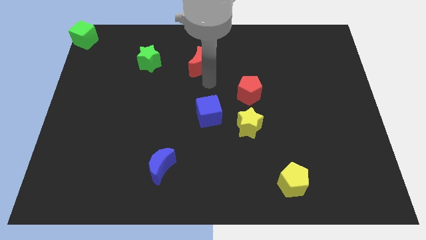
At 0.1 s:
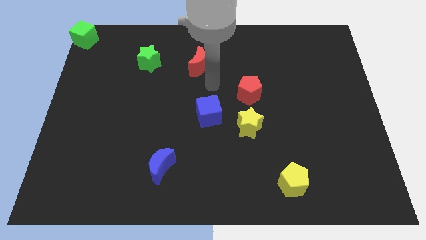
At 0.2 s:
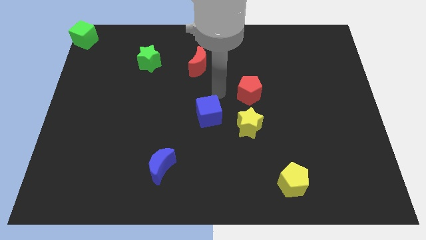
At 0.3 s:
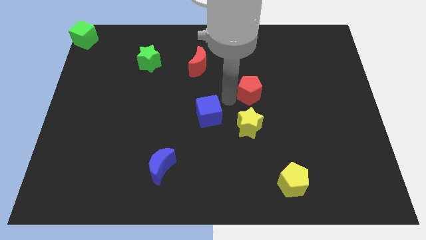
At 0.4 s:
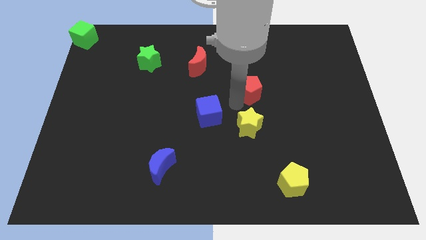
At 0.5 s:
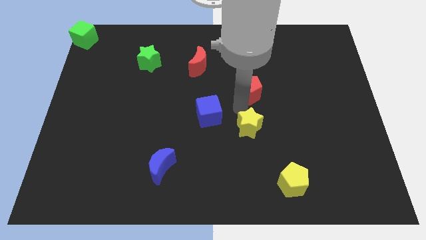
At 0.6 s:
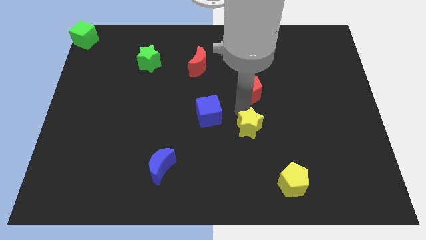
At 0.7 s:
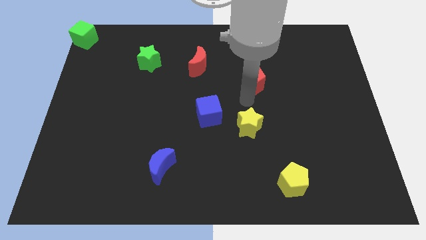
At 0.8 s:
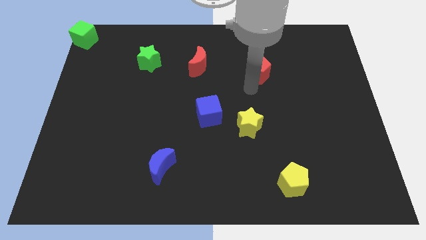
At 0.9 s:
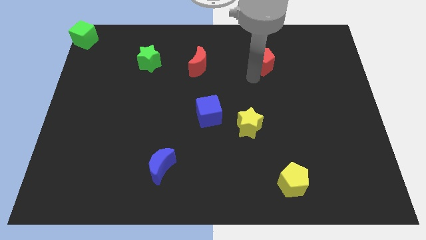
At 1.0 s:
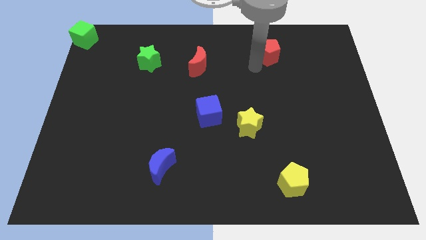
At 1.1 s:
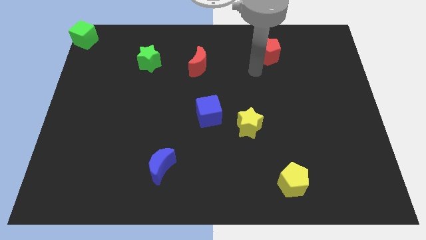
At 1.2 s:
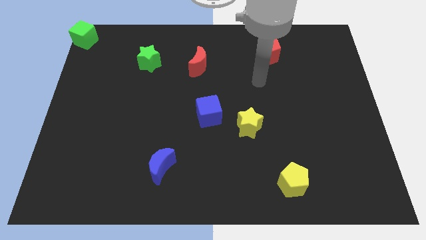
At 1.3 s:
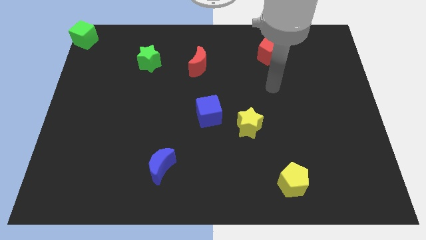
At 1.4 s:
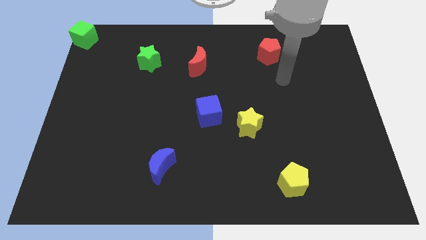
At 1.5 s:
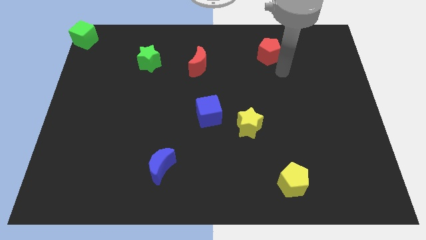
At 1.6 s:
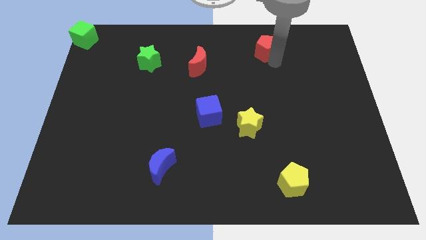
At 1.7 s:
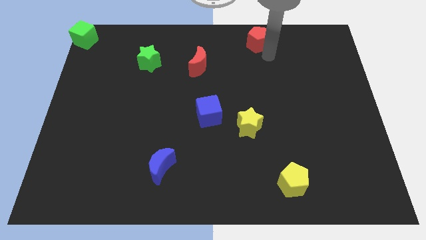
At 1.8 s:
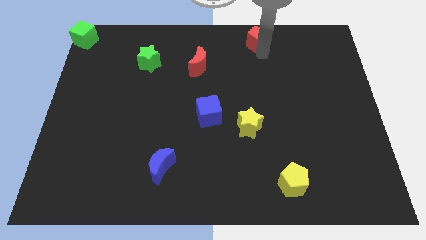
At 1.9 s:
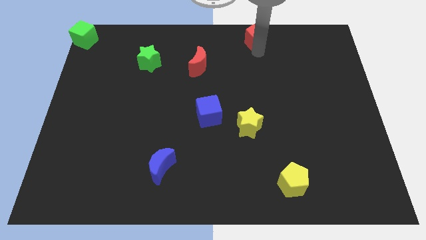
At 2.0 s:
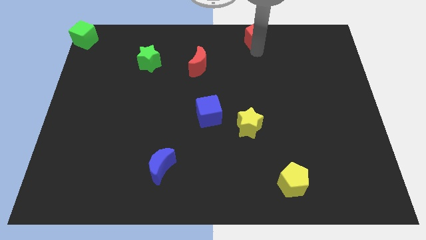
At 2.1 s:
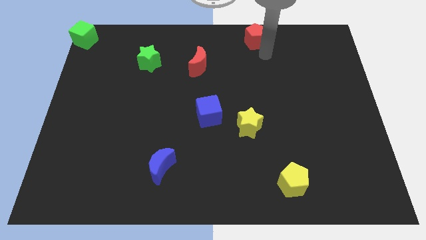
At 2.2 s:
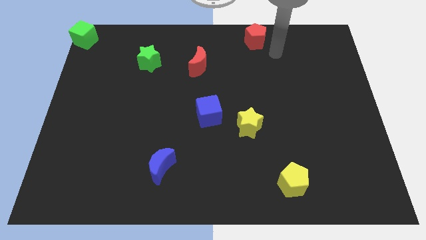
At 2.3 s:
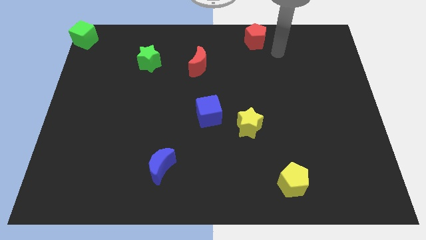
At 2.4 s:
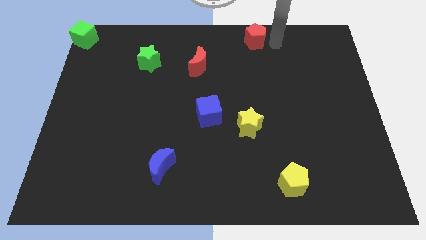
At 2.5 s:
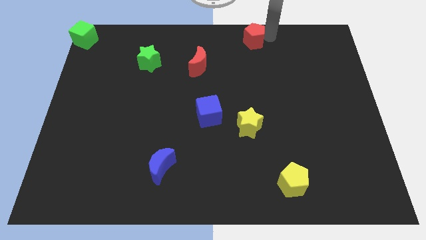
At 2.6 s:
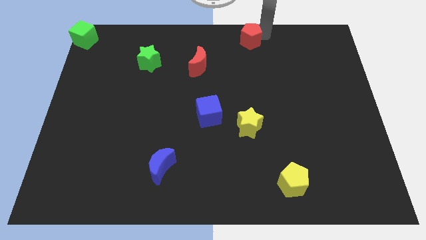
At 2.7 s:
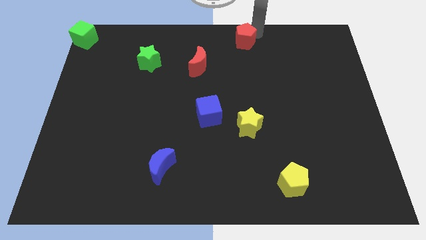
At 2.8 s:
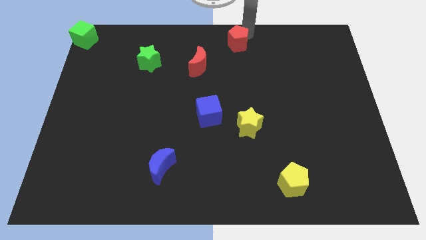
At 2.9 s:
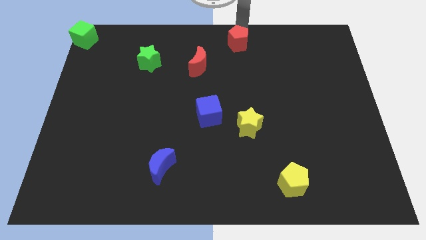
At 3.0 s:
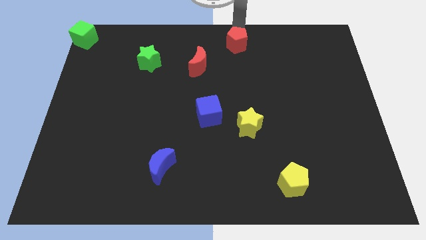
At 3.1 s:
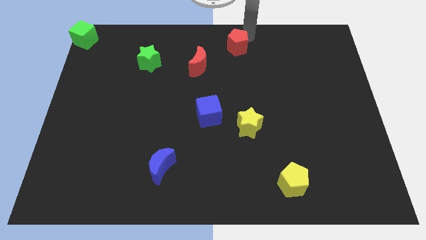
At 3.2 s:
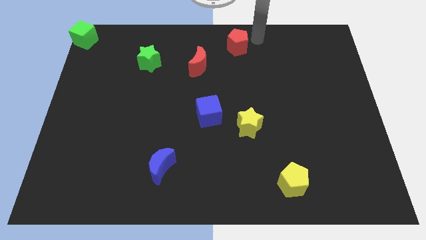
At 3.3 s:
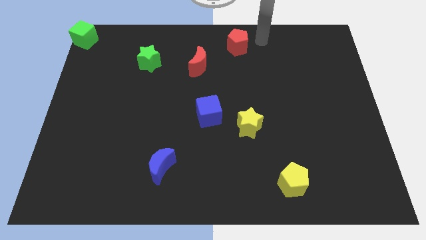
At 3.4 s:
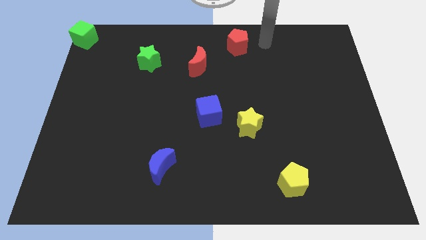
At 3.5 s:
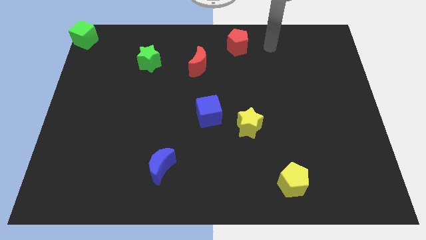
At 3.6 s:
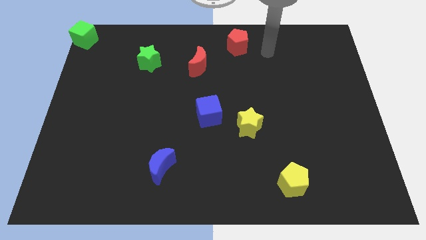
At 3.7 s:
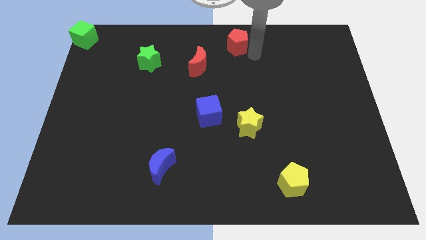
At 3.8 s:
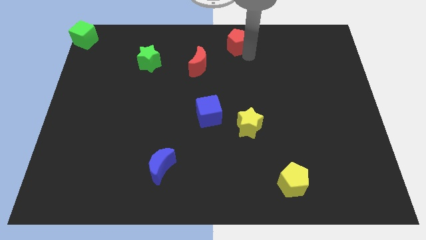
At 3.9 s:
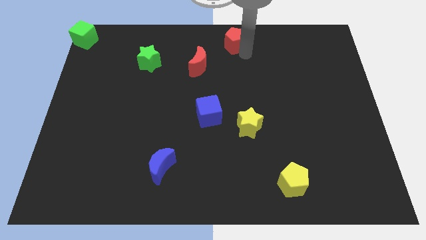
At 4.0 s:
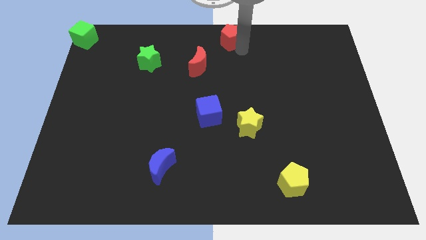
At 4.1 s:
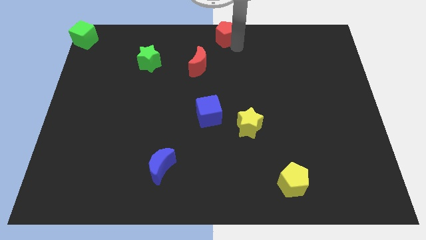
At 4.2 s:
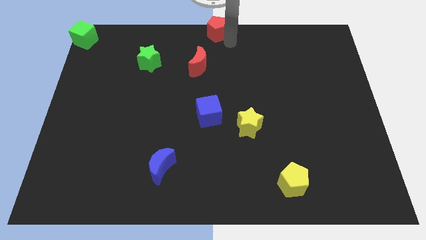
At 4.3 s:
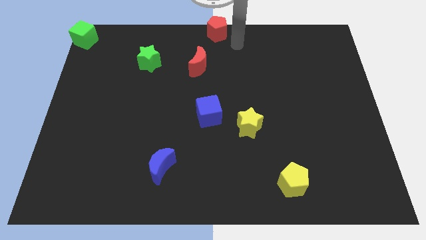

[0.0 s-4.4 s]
move the red pentagon to the top center

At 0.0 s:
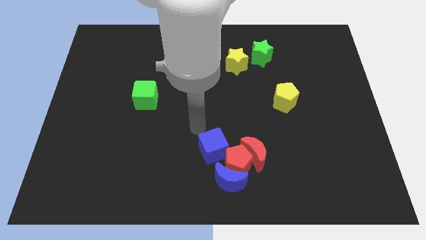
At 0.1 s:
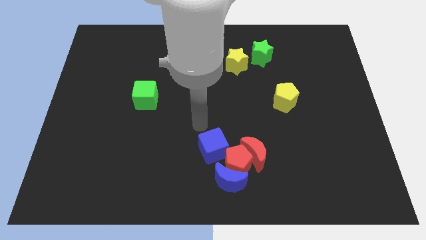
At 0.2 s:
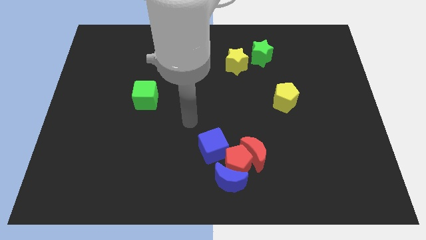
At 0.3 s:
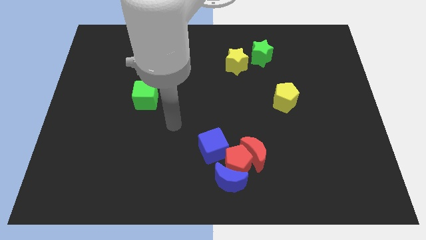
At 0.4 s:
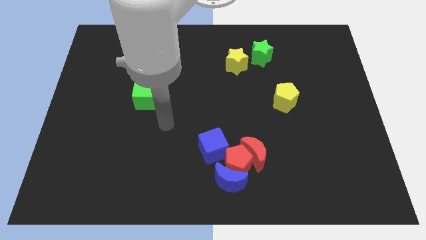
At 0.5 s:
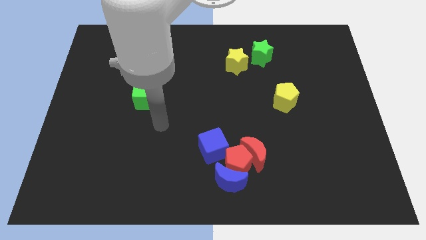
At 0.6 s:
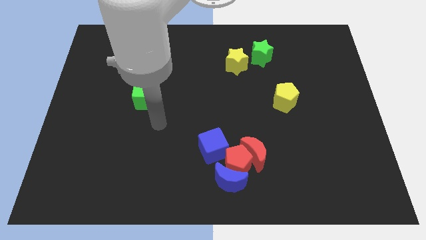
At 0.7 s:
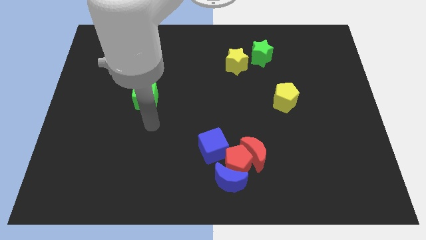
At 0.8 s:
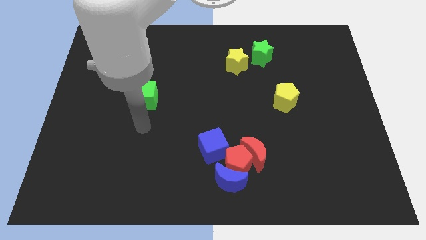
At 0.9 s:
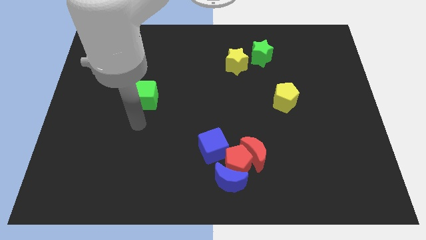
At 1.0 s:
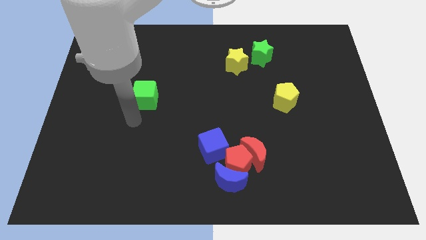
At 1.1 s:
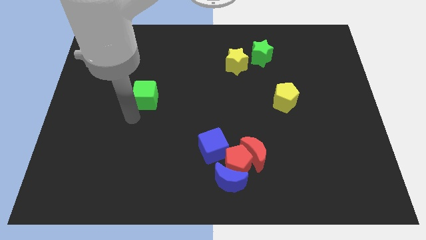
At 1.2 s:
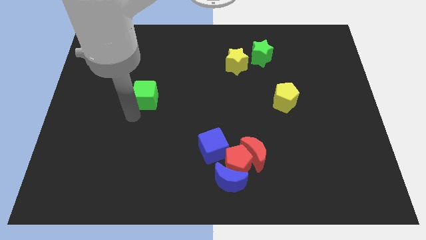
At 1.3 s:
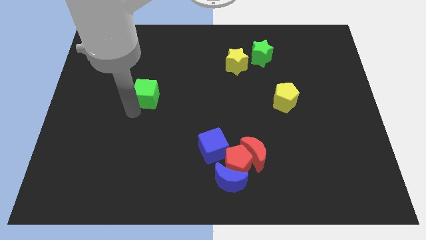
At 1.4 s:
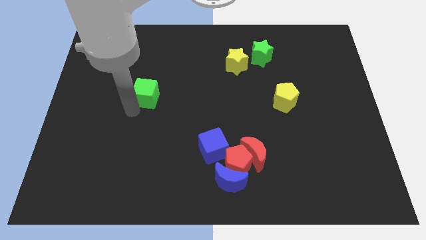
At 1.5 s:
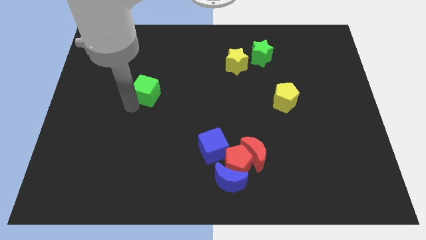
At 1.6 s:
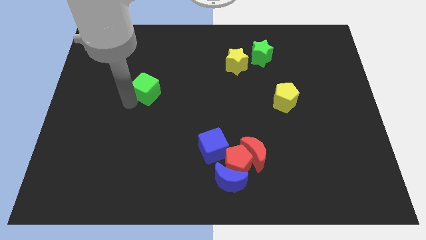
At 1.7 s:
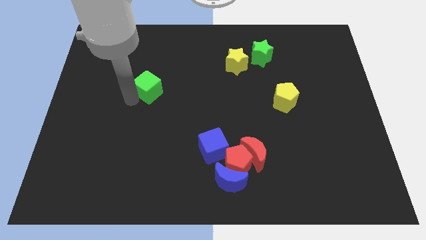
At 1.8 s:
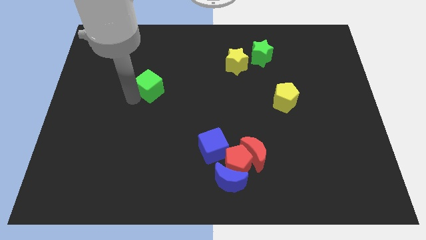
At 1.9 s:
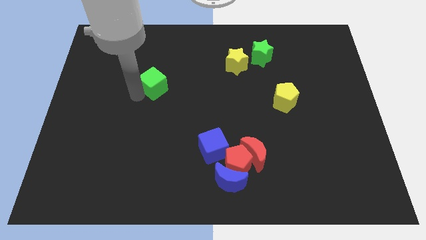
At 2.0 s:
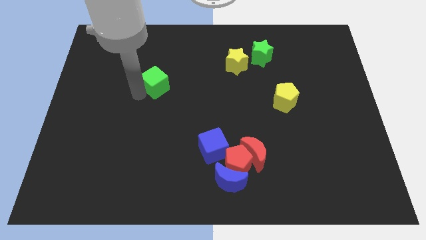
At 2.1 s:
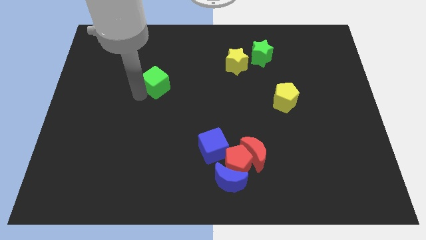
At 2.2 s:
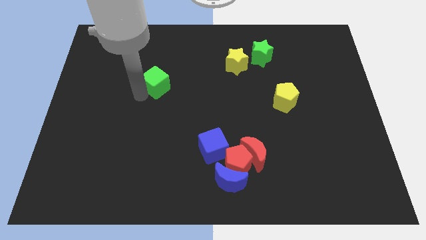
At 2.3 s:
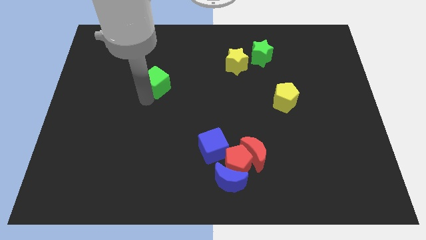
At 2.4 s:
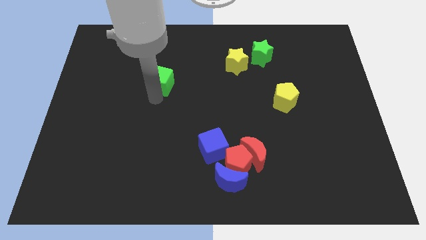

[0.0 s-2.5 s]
slightly move the green cube towards the yellow star

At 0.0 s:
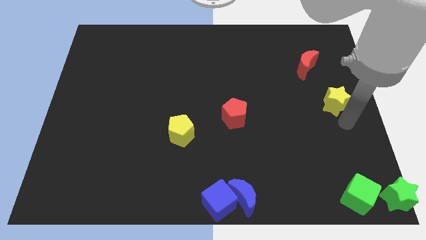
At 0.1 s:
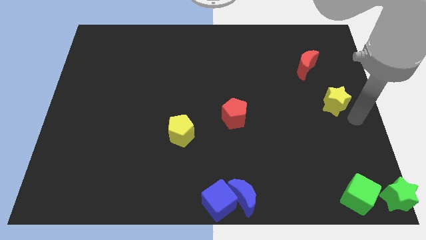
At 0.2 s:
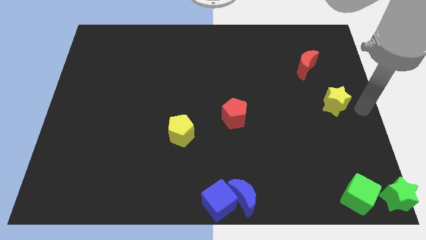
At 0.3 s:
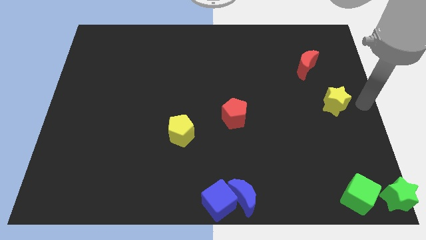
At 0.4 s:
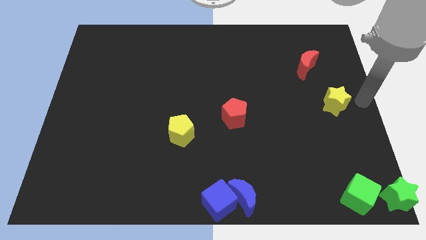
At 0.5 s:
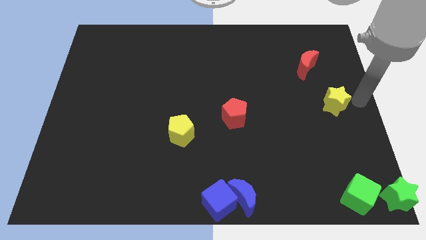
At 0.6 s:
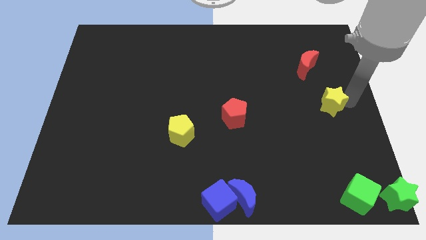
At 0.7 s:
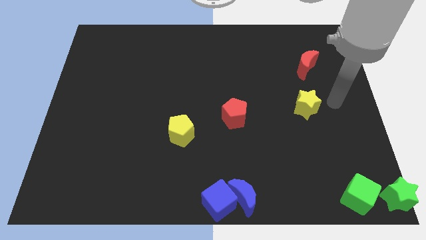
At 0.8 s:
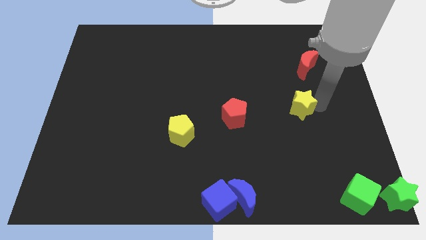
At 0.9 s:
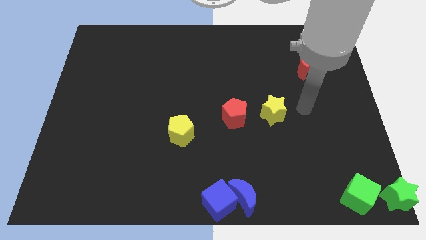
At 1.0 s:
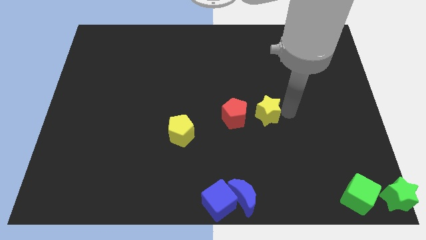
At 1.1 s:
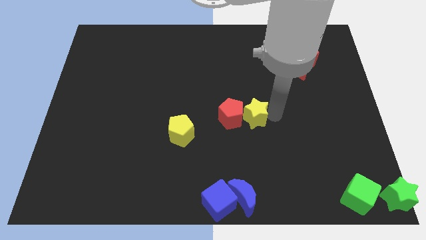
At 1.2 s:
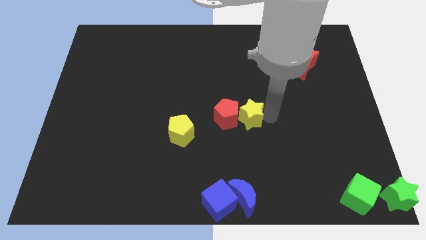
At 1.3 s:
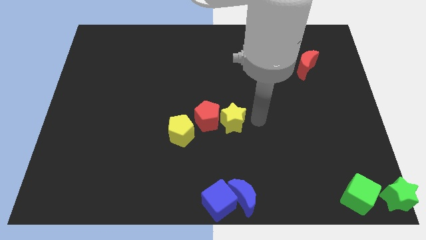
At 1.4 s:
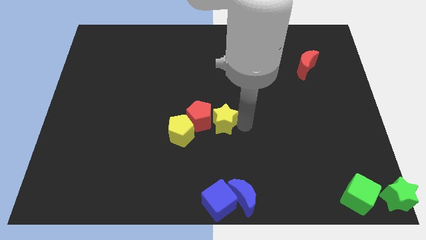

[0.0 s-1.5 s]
push the yellow star into red pentagon

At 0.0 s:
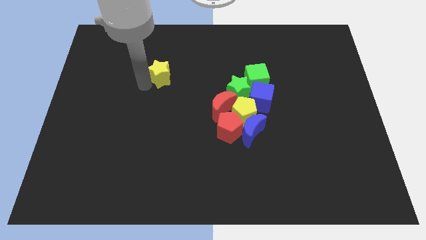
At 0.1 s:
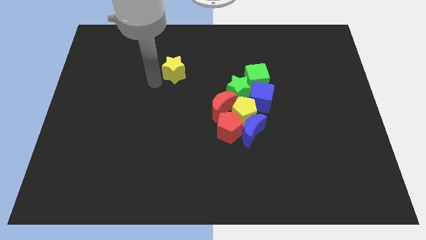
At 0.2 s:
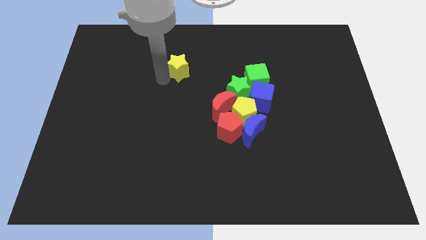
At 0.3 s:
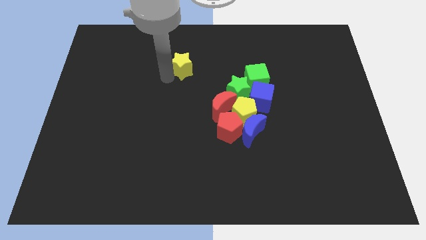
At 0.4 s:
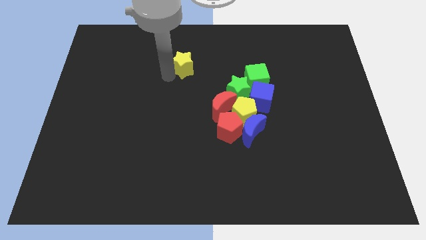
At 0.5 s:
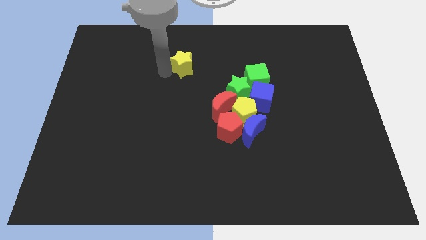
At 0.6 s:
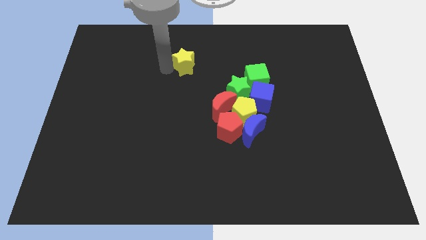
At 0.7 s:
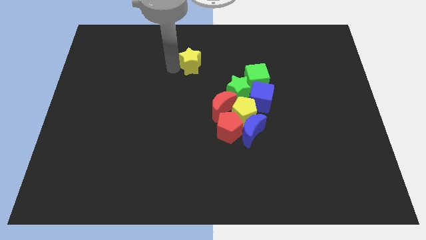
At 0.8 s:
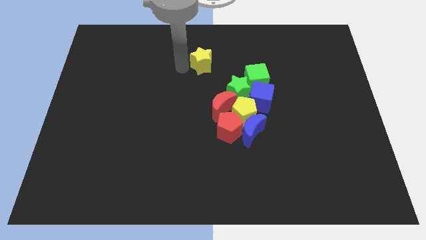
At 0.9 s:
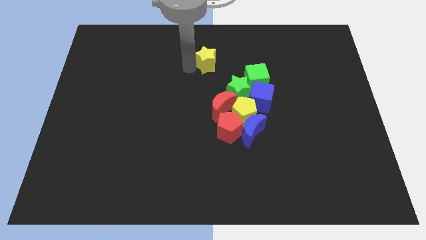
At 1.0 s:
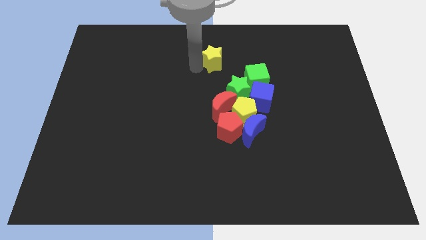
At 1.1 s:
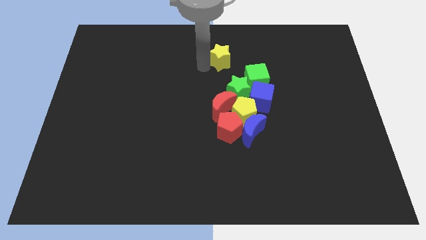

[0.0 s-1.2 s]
drag the yellow star diagonally to the green star
